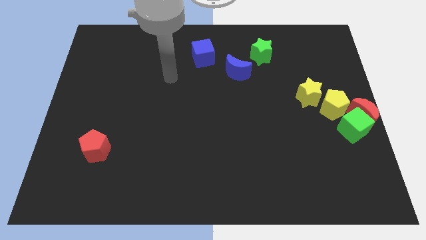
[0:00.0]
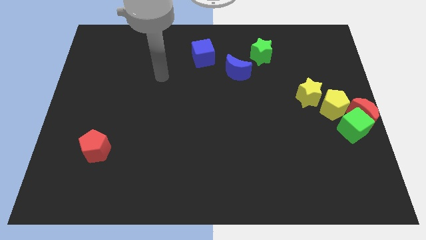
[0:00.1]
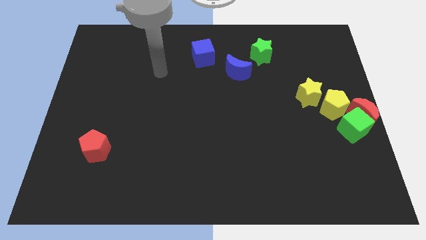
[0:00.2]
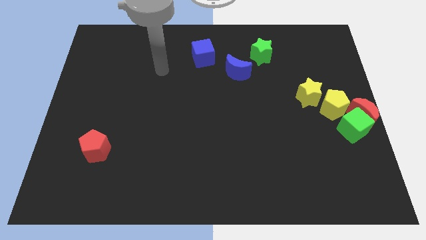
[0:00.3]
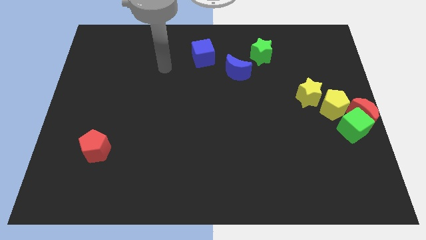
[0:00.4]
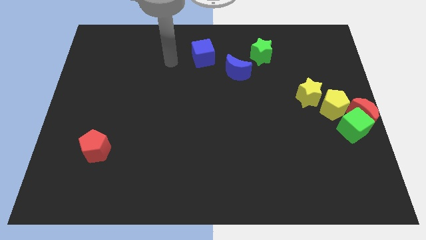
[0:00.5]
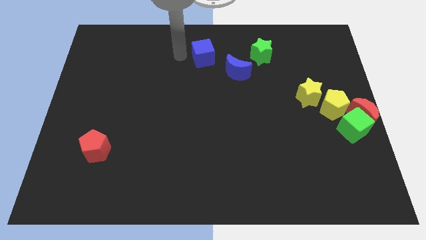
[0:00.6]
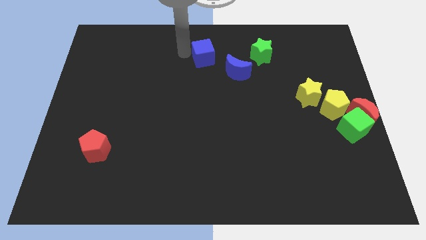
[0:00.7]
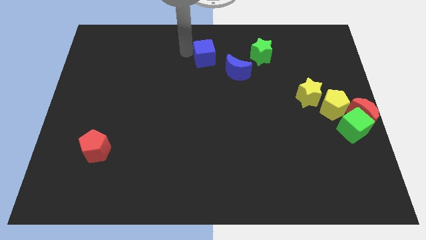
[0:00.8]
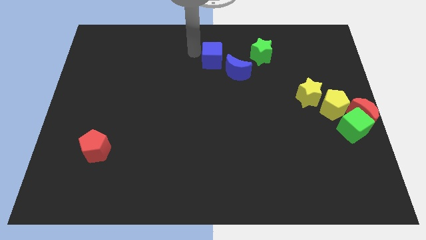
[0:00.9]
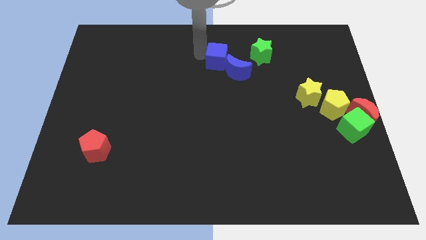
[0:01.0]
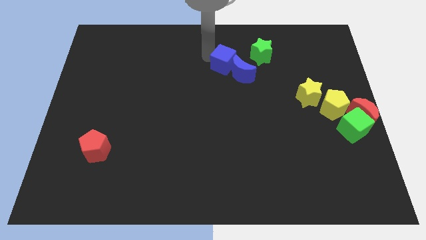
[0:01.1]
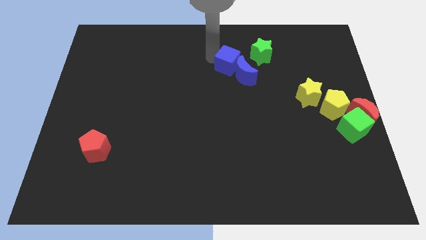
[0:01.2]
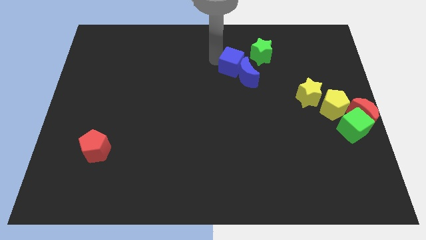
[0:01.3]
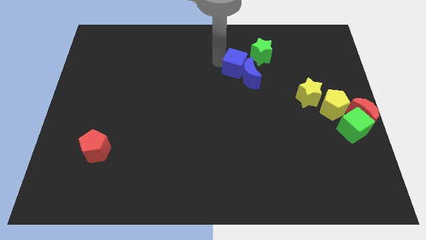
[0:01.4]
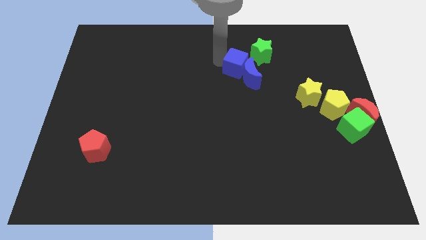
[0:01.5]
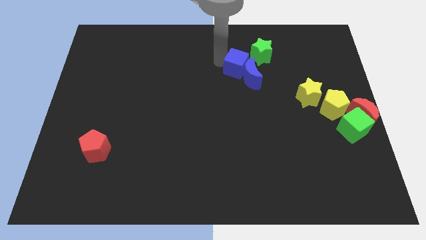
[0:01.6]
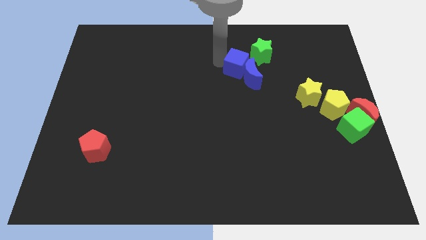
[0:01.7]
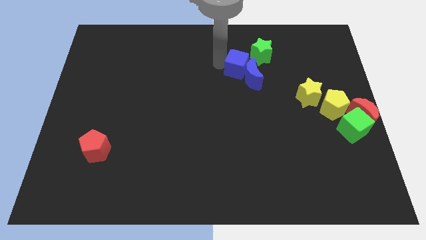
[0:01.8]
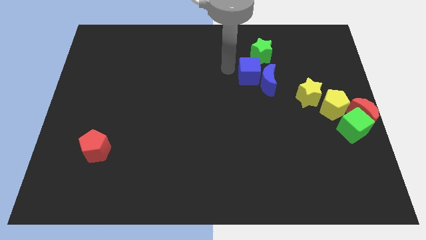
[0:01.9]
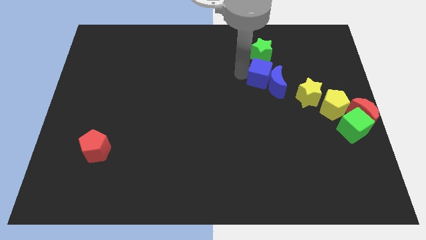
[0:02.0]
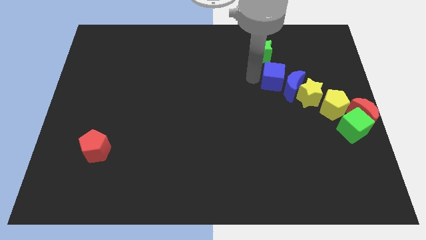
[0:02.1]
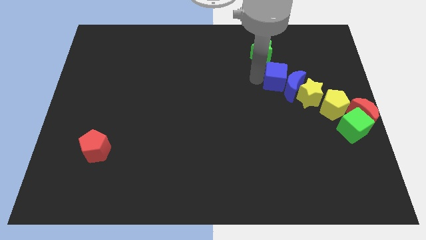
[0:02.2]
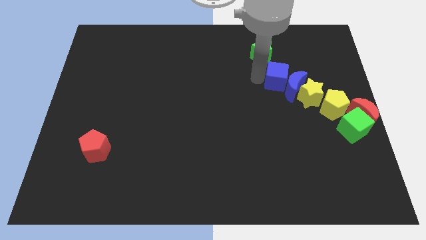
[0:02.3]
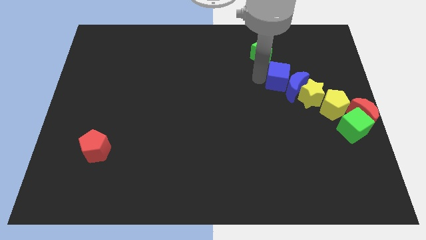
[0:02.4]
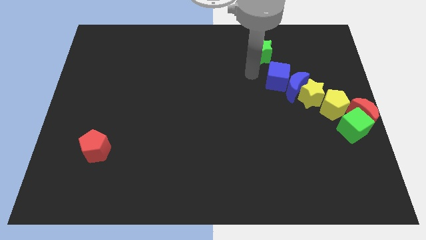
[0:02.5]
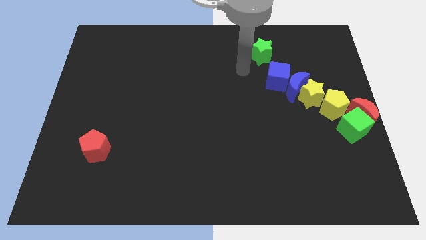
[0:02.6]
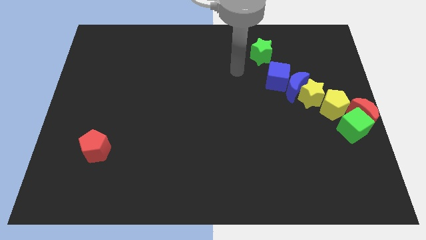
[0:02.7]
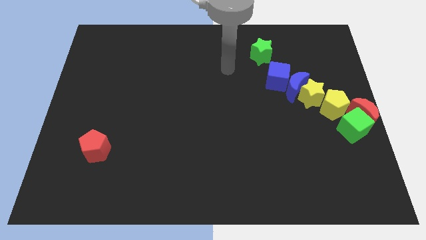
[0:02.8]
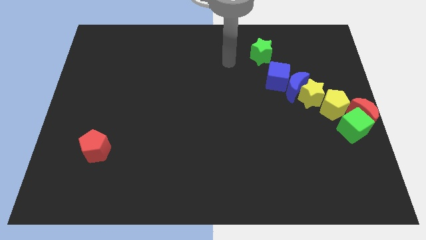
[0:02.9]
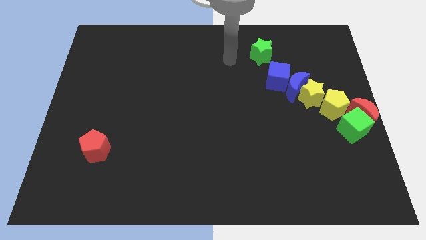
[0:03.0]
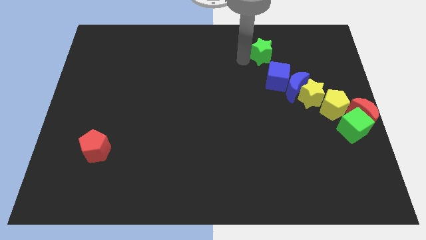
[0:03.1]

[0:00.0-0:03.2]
push the blue crescent with the blue cube towards the right center of the board

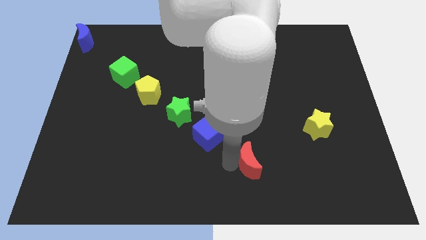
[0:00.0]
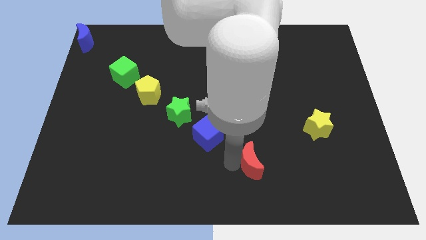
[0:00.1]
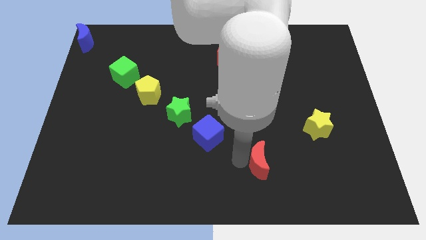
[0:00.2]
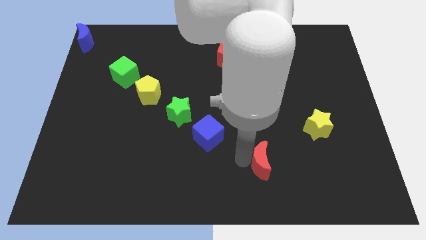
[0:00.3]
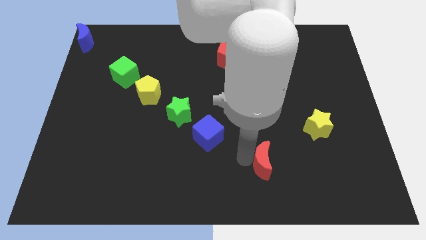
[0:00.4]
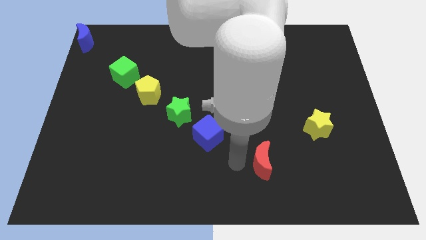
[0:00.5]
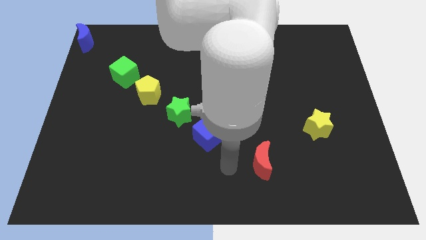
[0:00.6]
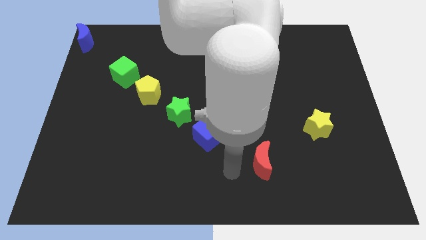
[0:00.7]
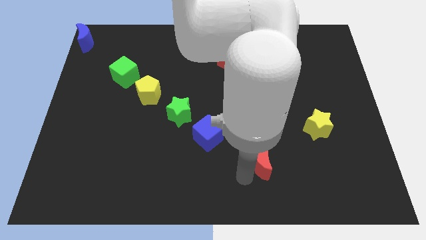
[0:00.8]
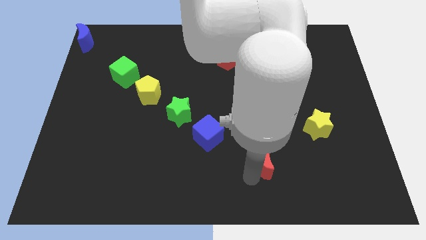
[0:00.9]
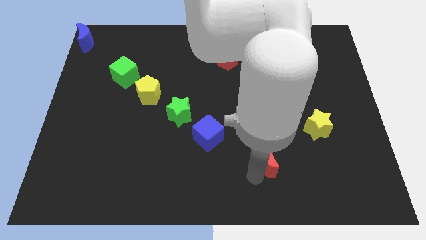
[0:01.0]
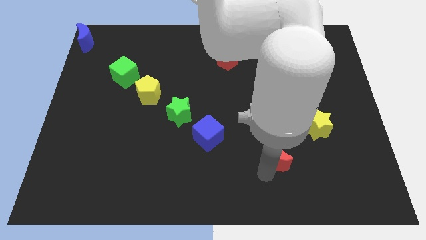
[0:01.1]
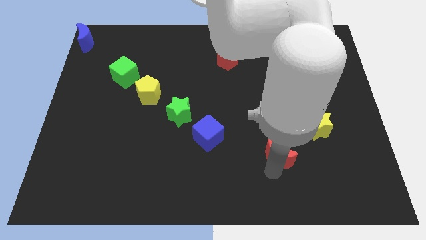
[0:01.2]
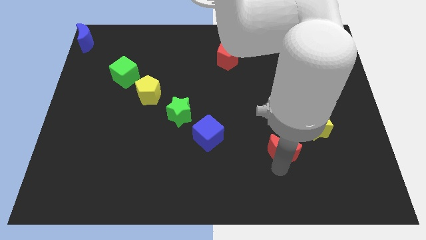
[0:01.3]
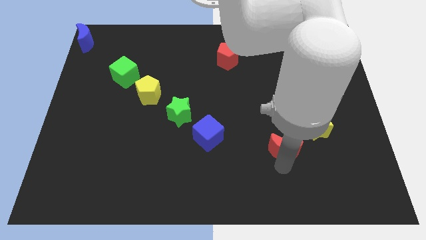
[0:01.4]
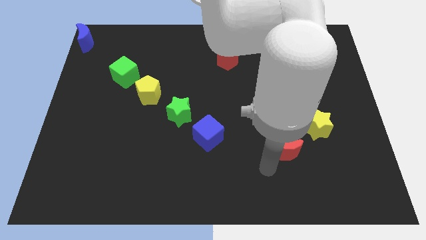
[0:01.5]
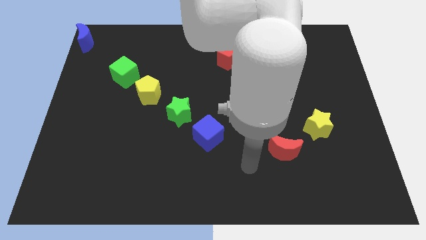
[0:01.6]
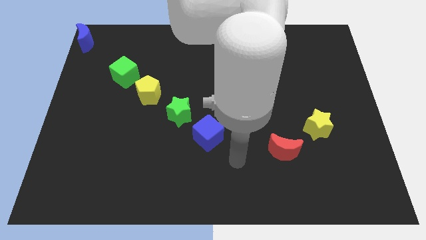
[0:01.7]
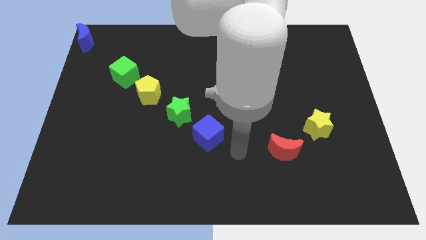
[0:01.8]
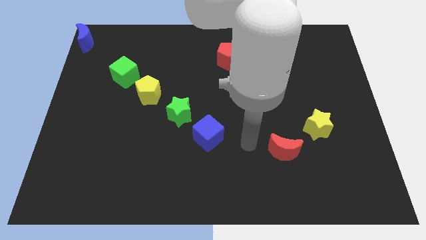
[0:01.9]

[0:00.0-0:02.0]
move the red crescent close to the yellow star

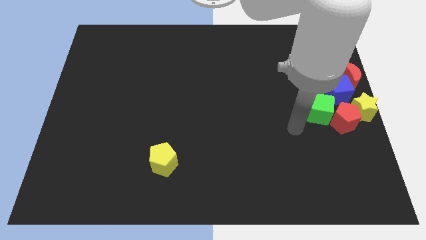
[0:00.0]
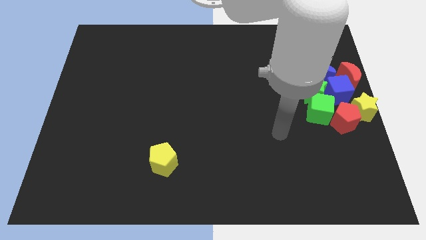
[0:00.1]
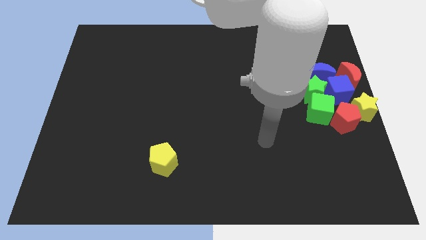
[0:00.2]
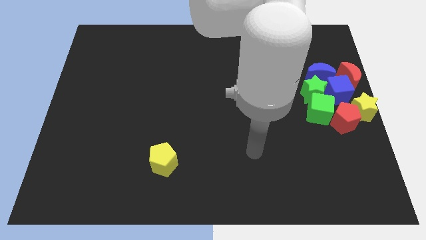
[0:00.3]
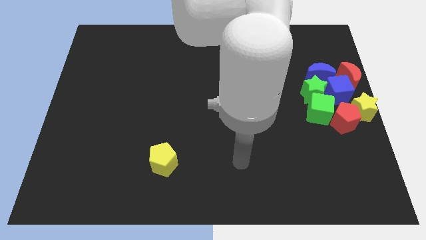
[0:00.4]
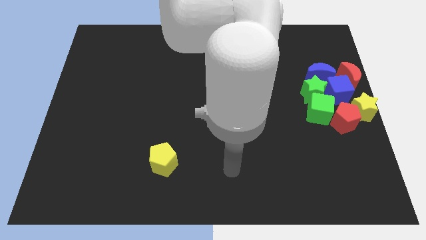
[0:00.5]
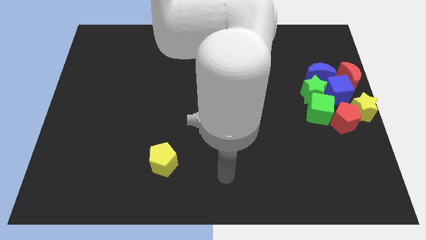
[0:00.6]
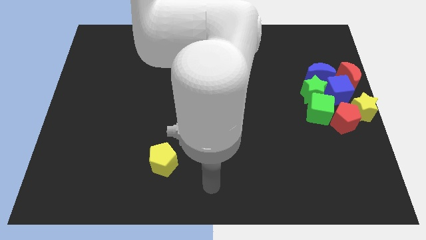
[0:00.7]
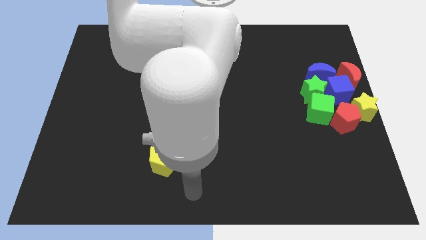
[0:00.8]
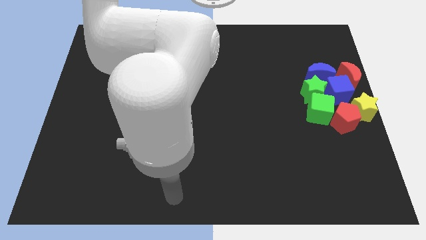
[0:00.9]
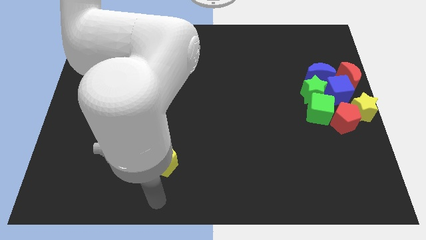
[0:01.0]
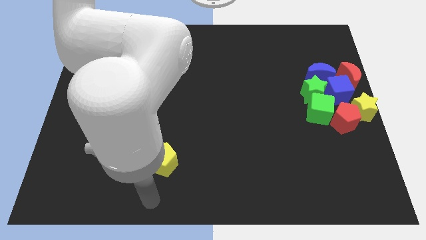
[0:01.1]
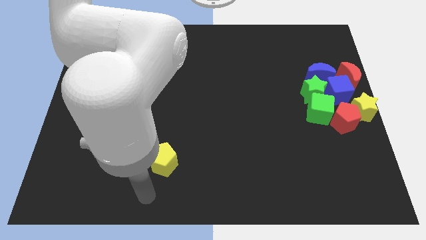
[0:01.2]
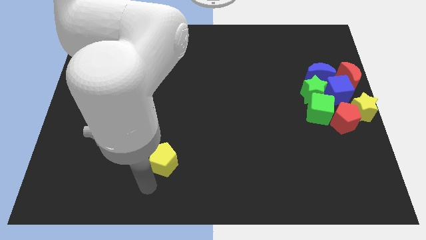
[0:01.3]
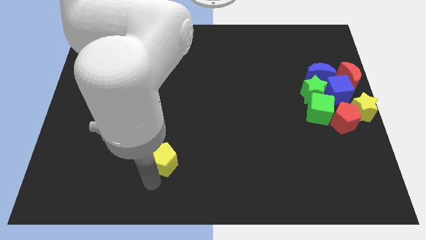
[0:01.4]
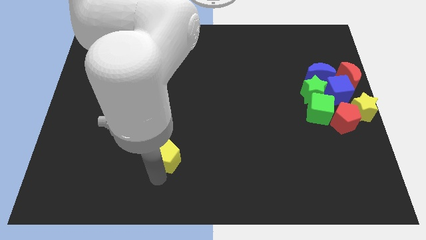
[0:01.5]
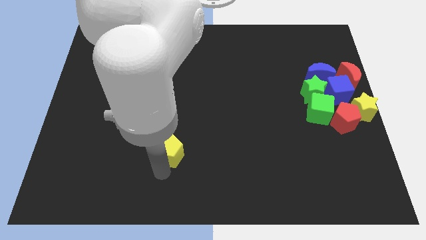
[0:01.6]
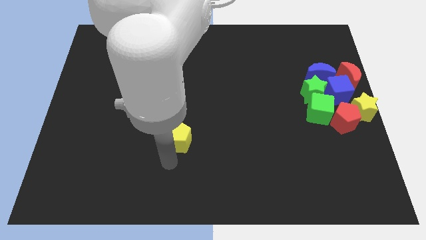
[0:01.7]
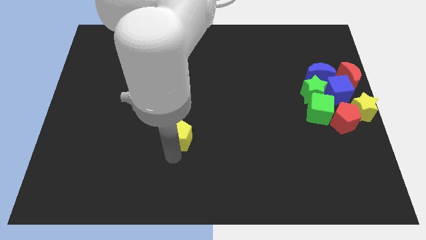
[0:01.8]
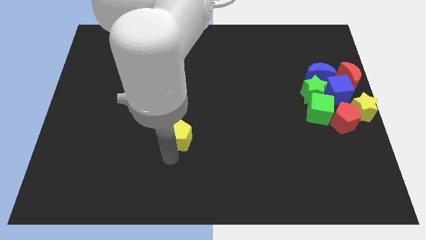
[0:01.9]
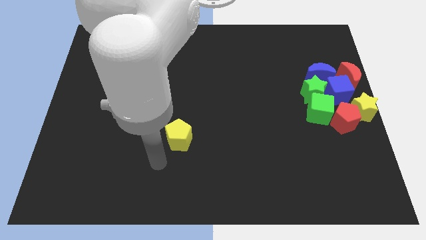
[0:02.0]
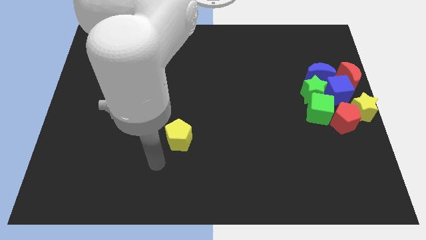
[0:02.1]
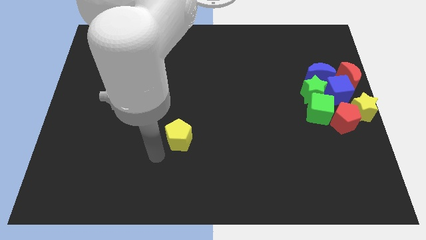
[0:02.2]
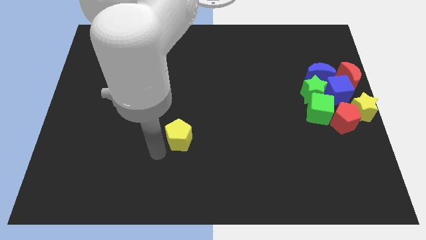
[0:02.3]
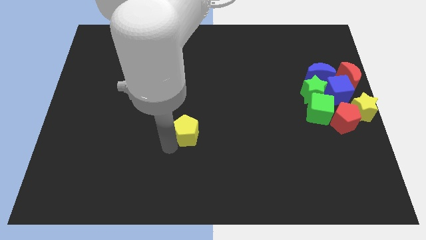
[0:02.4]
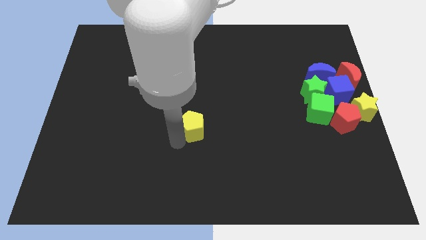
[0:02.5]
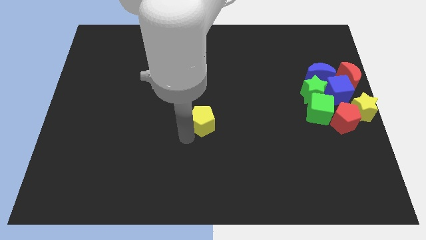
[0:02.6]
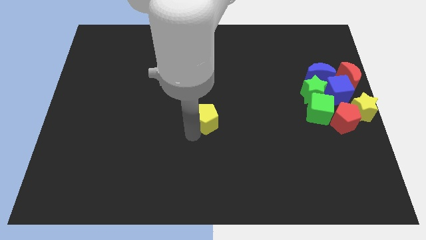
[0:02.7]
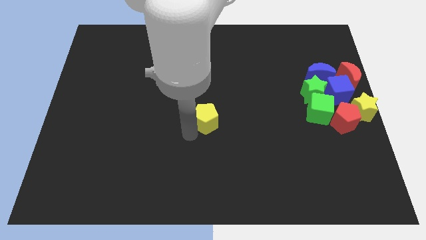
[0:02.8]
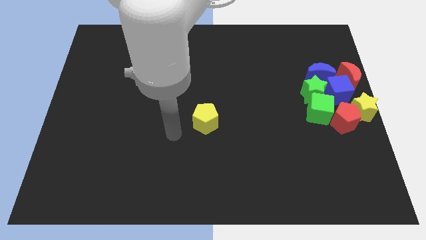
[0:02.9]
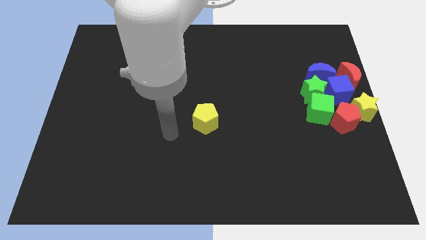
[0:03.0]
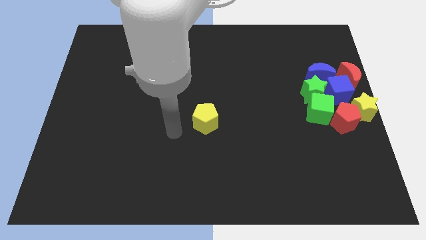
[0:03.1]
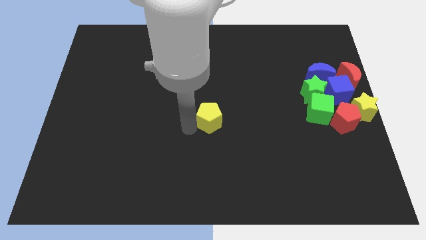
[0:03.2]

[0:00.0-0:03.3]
move the yellow pentagon to the center

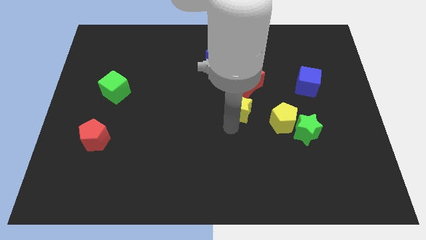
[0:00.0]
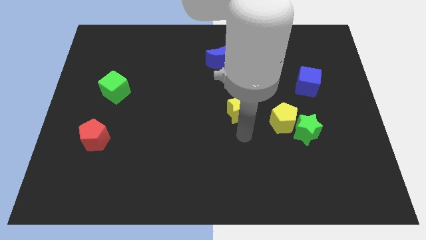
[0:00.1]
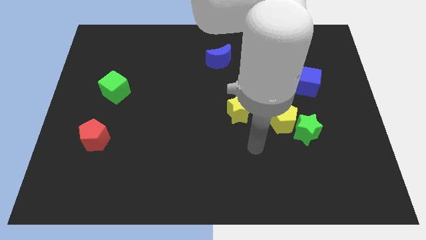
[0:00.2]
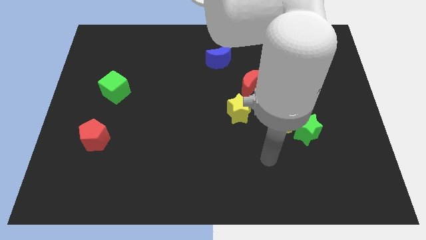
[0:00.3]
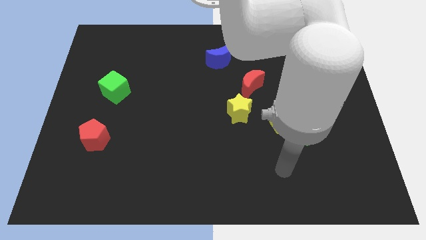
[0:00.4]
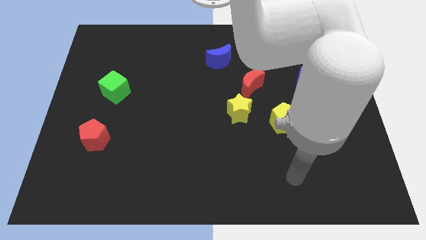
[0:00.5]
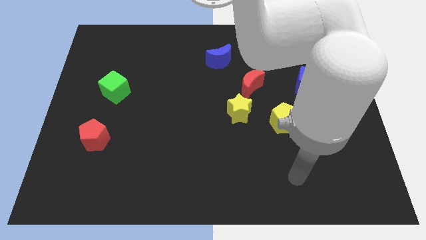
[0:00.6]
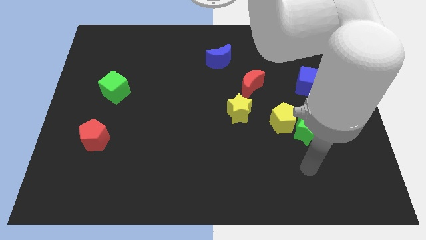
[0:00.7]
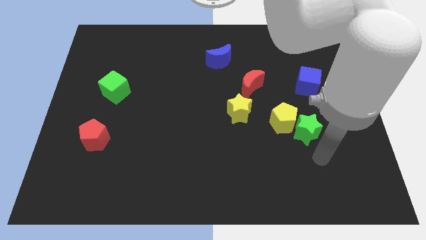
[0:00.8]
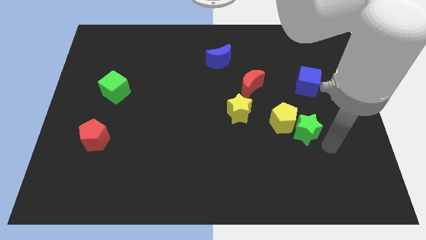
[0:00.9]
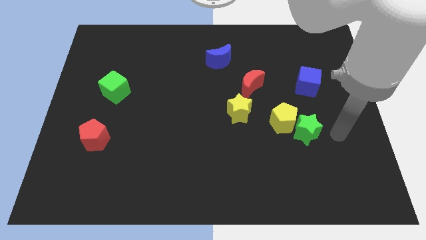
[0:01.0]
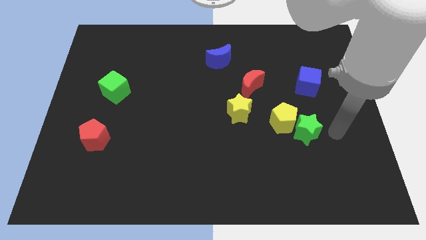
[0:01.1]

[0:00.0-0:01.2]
point your arm to the right of the green star
